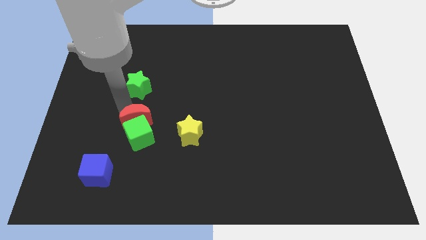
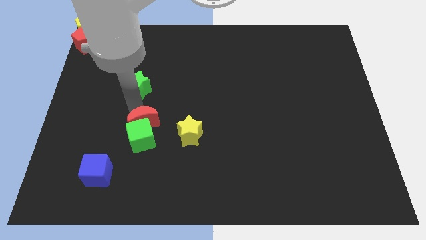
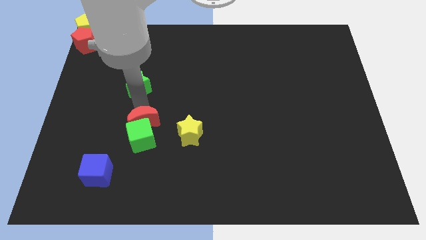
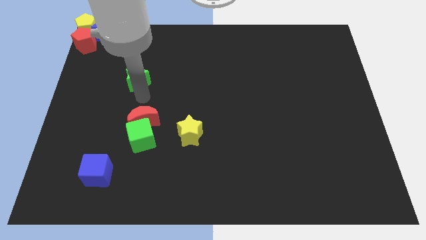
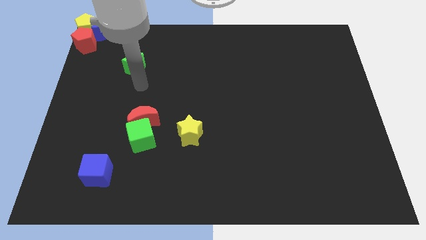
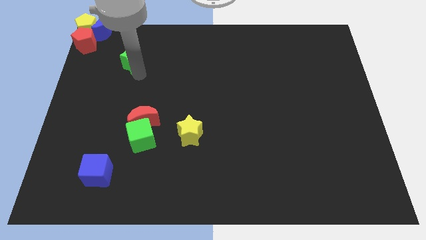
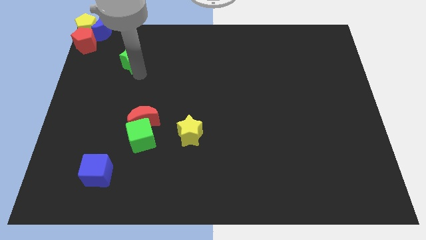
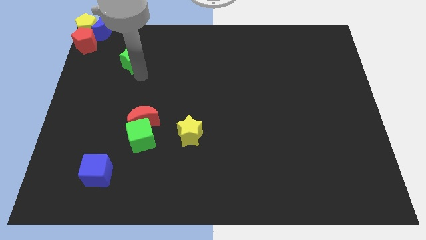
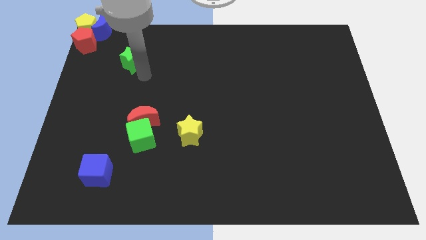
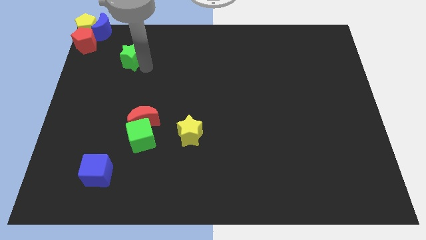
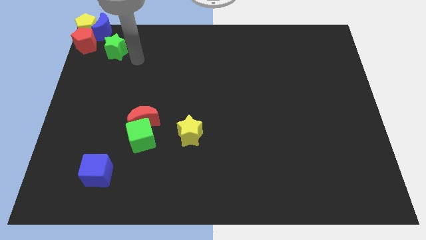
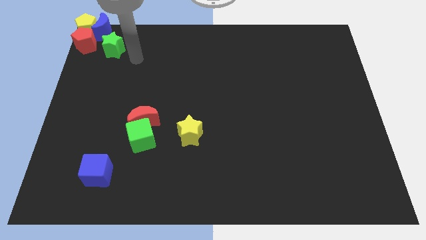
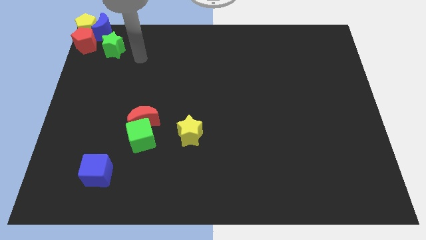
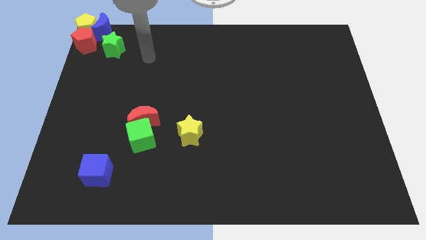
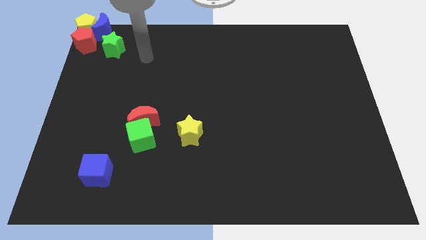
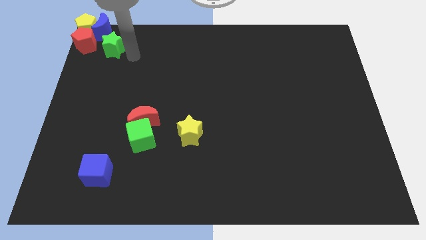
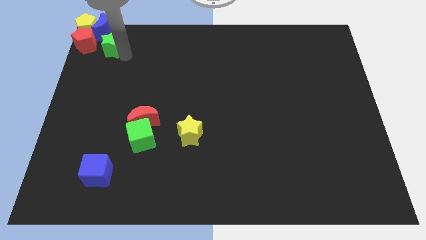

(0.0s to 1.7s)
separate the green star from red crescent

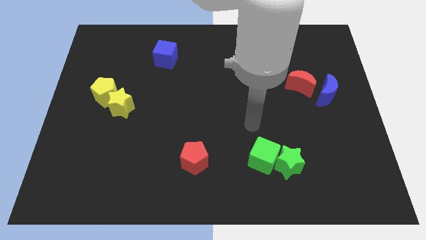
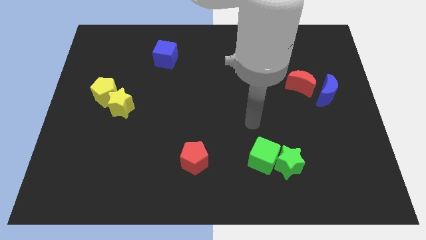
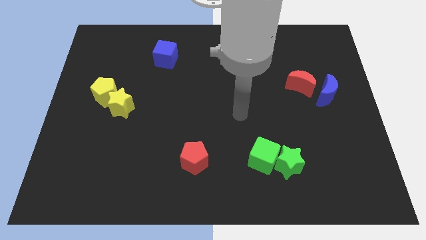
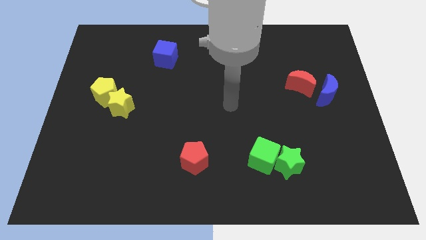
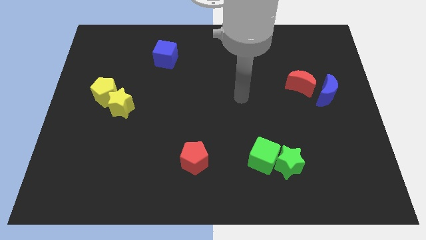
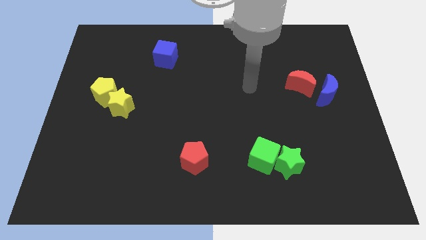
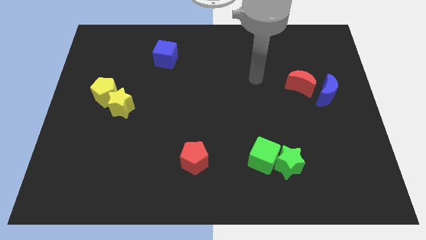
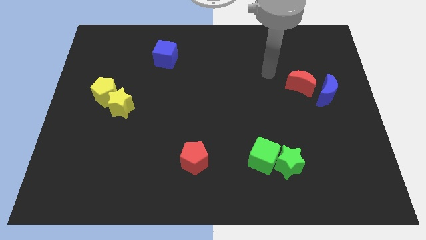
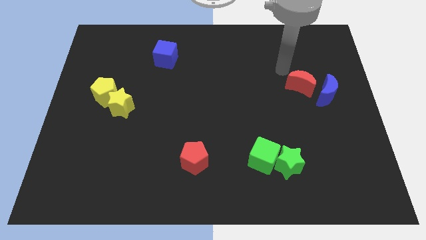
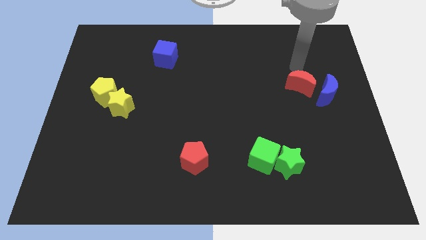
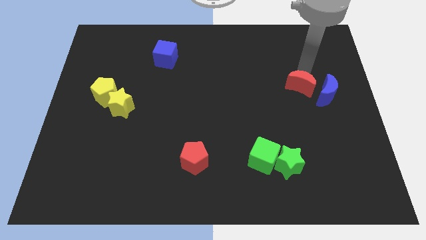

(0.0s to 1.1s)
move your arm close to the red moon

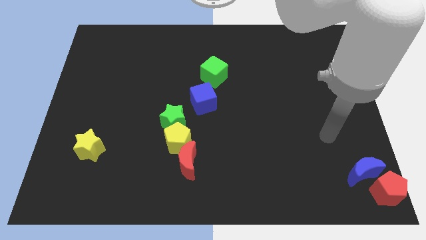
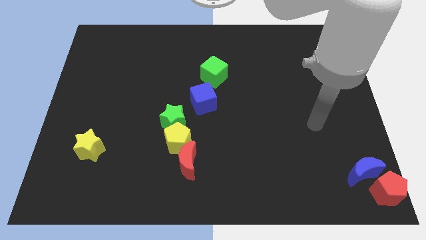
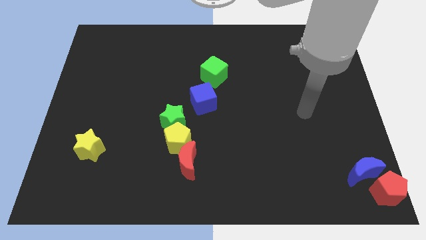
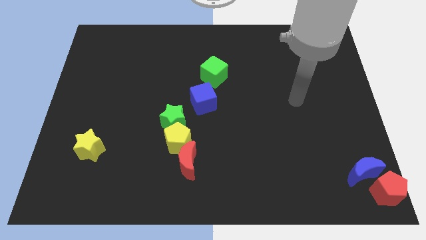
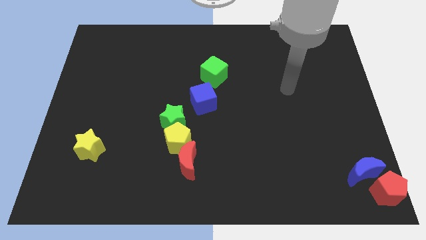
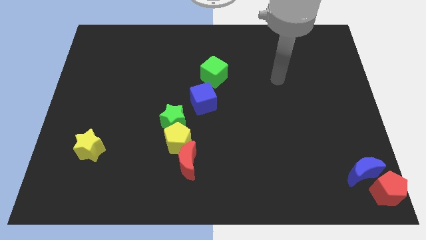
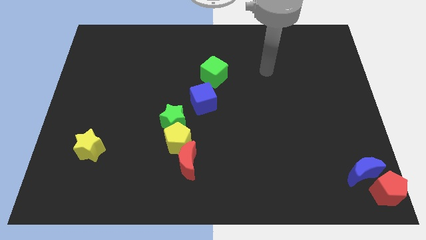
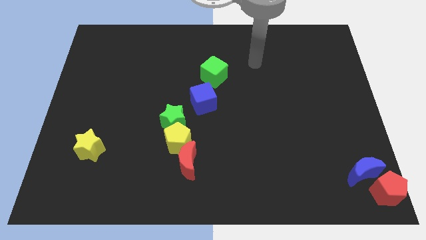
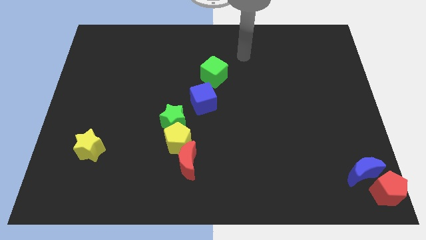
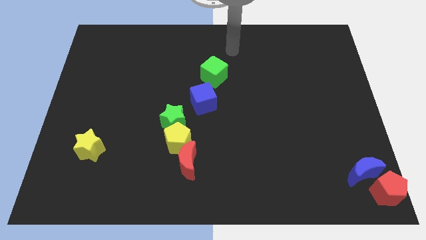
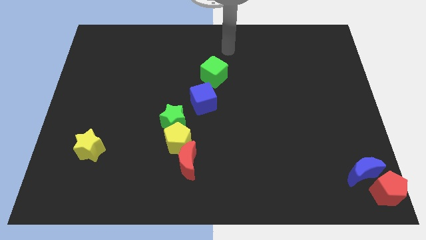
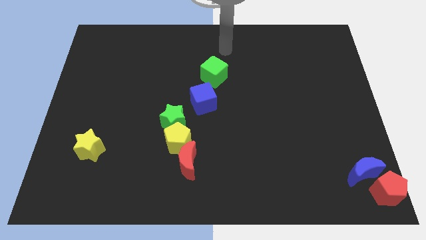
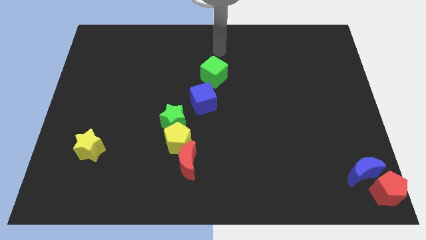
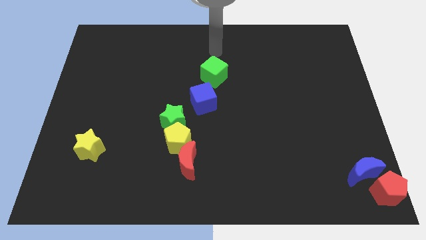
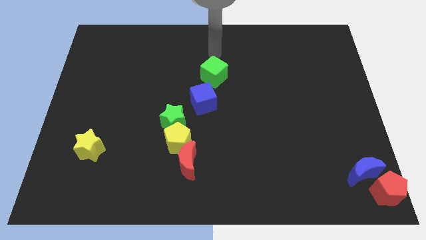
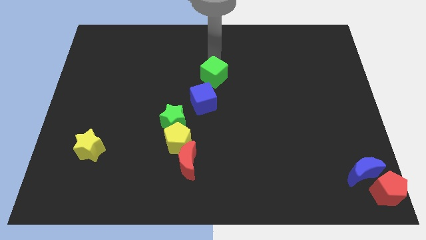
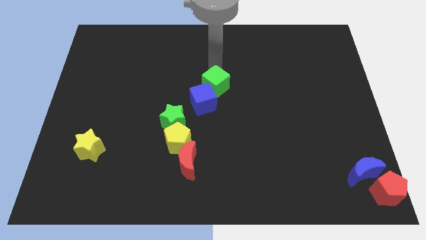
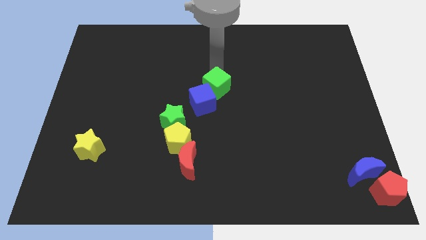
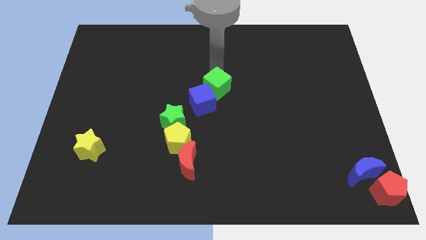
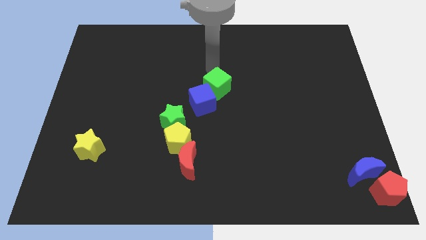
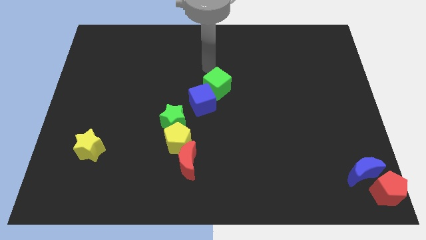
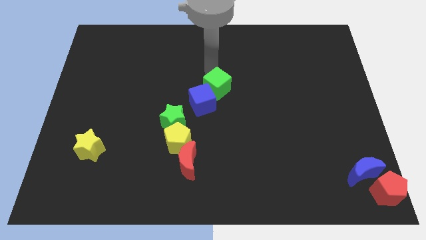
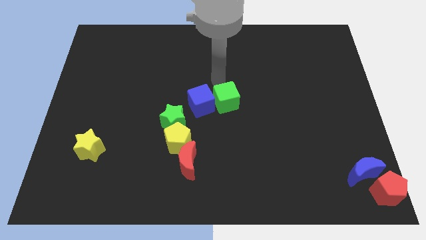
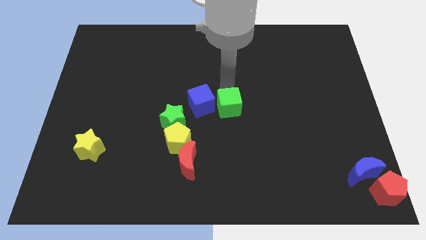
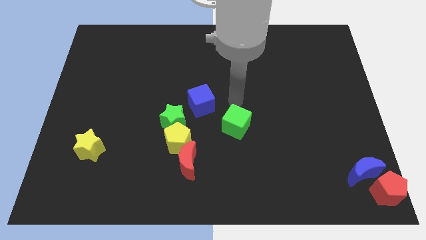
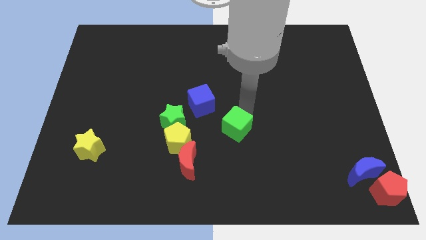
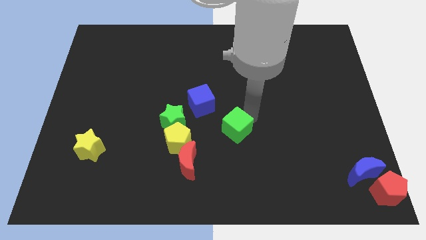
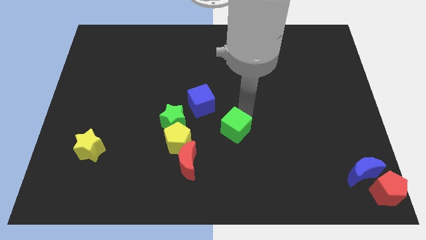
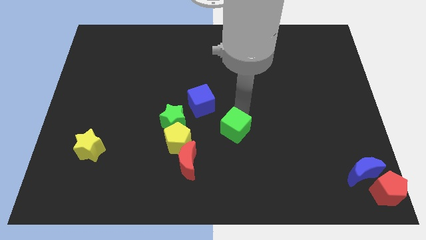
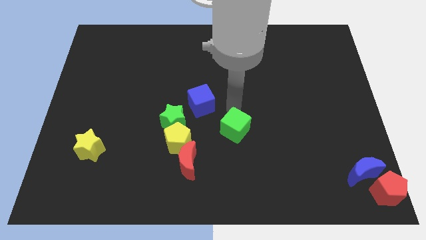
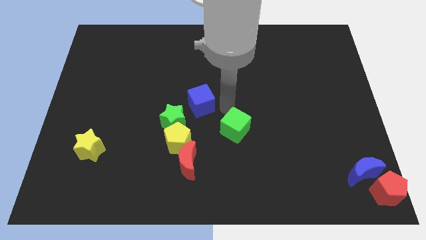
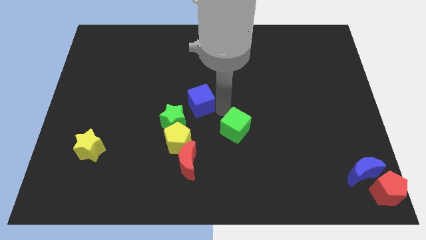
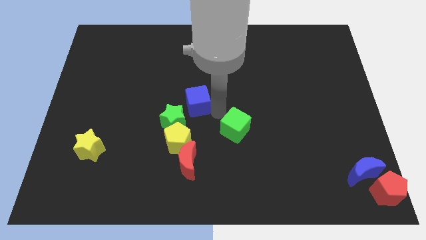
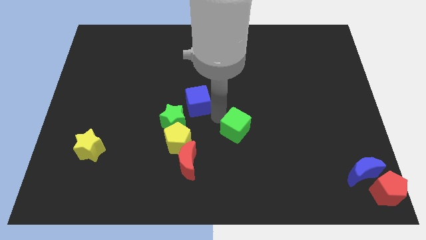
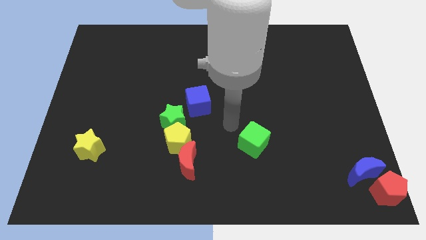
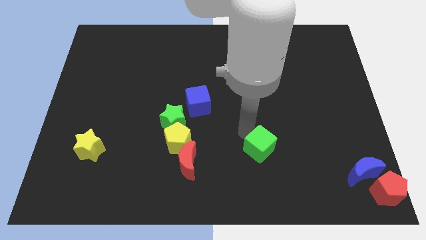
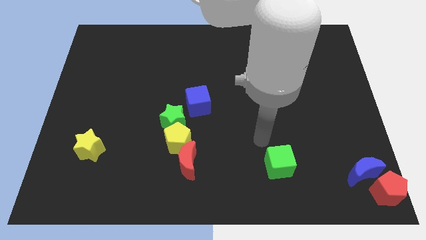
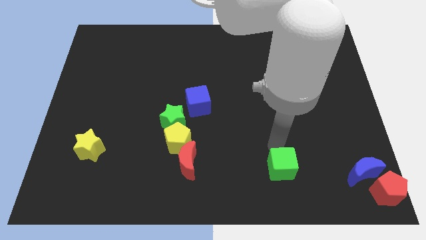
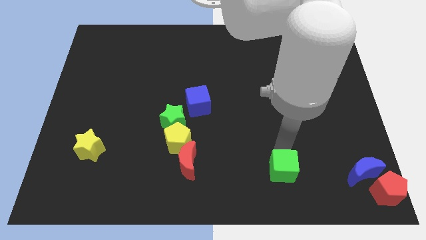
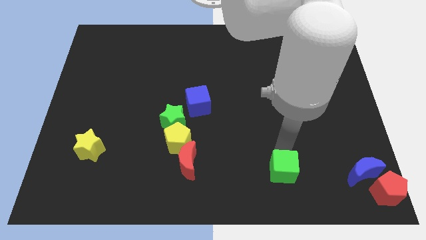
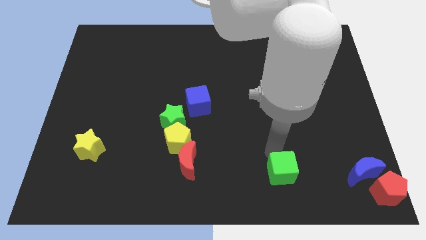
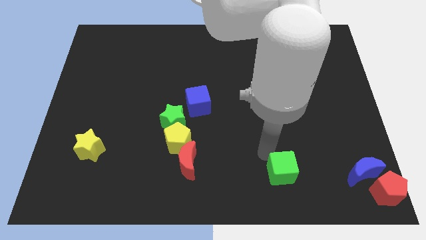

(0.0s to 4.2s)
place a green cube to the left of the blue moon

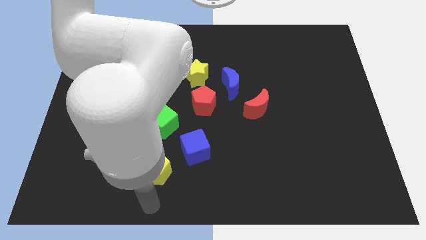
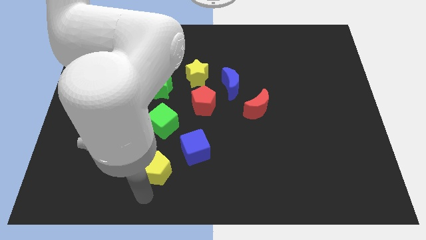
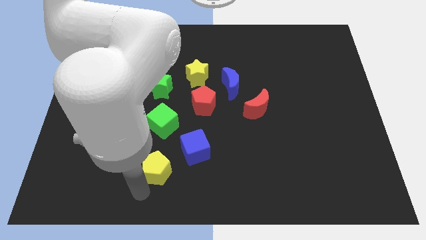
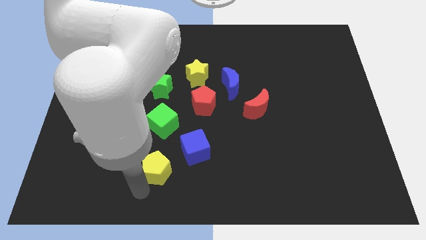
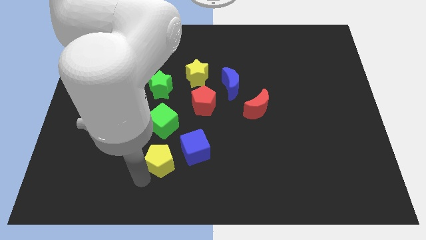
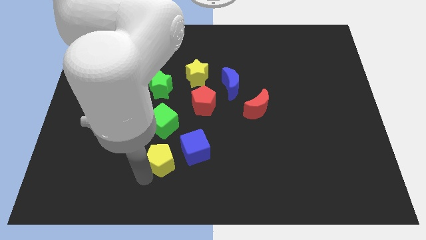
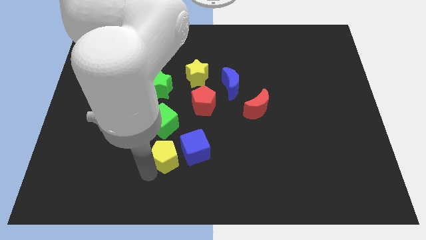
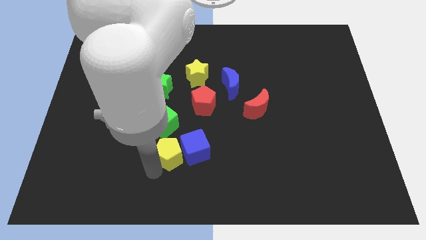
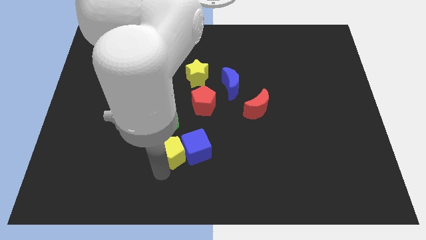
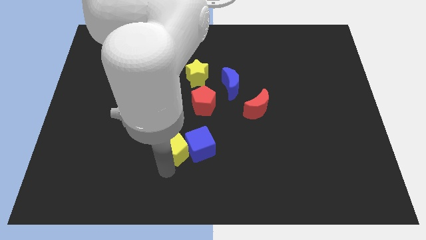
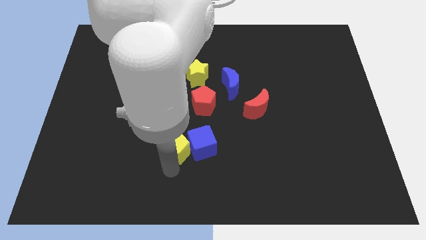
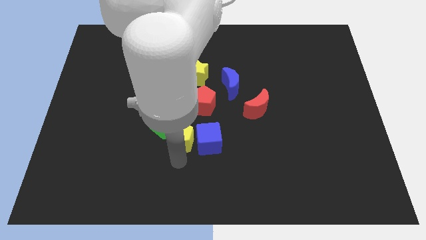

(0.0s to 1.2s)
push the yellow pentagon into the blue cube

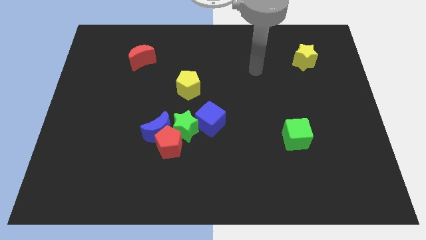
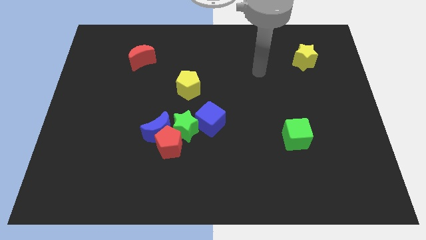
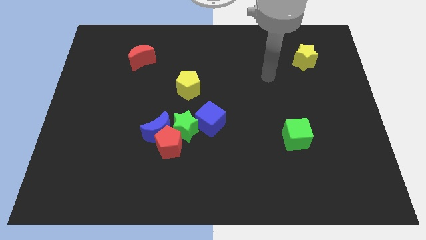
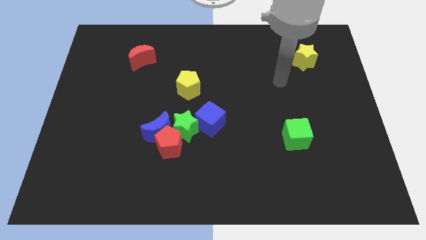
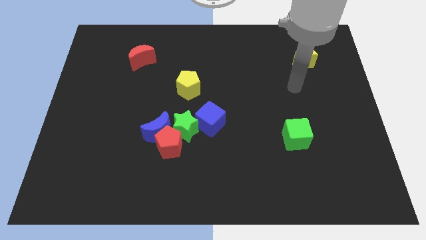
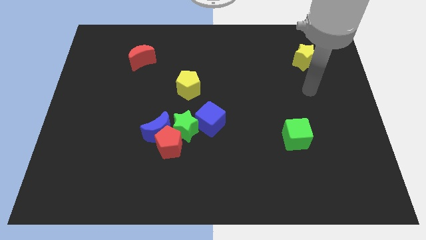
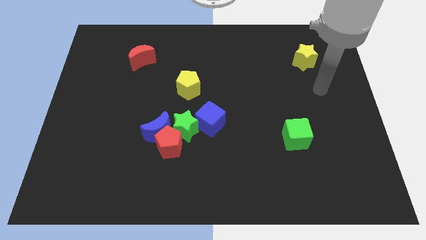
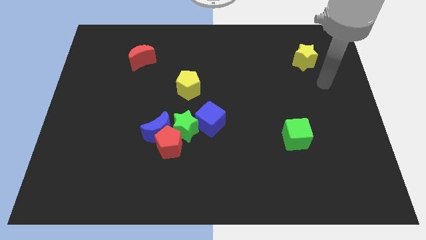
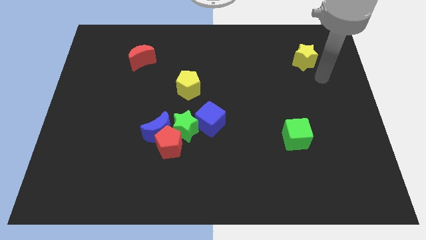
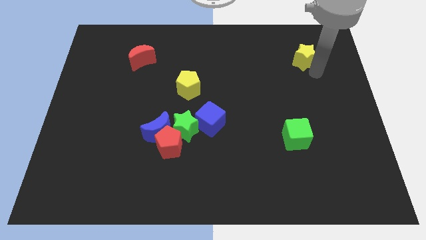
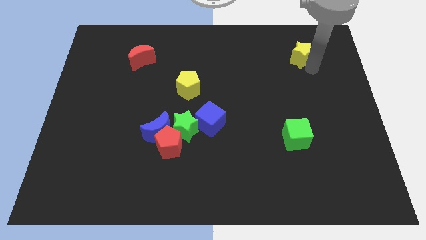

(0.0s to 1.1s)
tap the yellow star

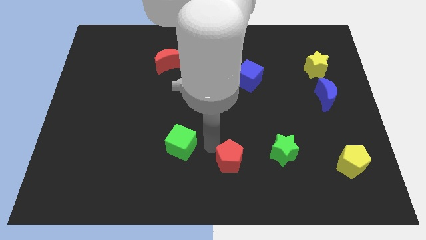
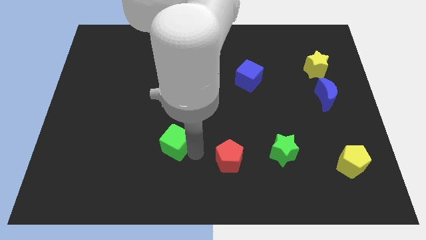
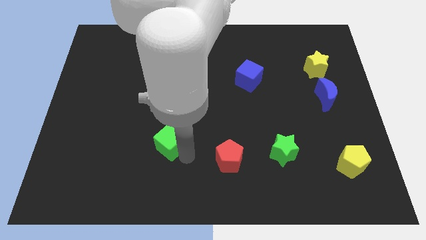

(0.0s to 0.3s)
move the arm into the green cube
